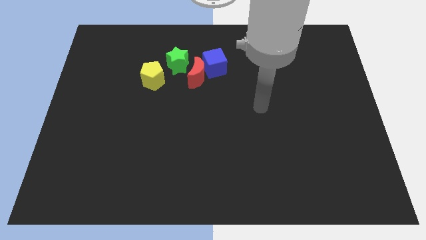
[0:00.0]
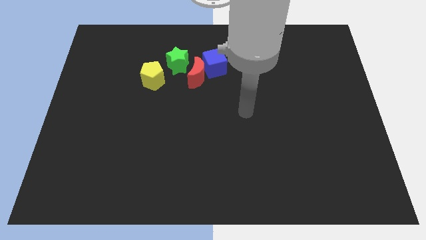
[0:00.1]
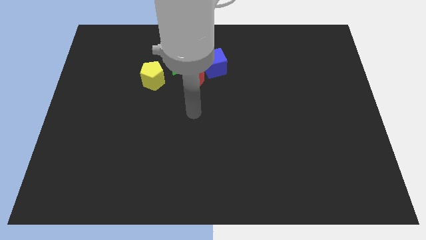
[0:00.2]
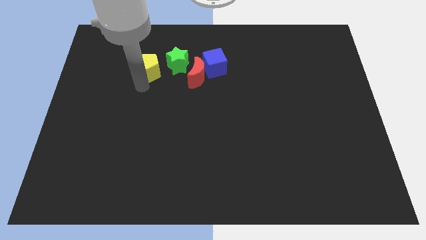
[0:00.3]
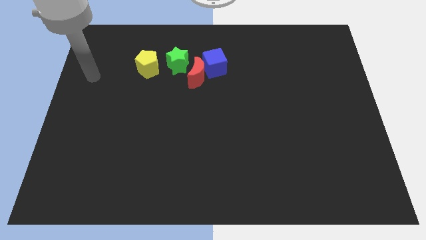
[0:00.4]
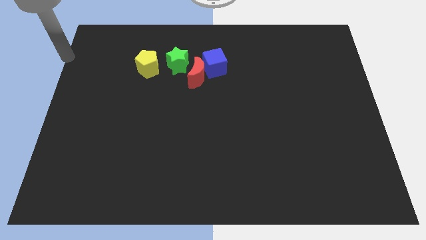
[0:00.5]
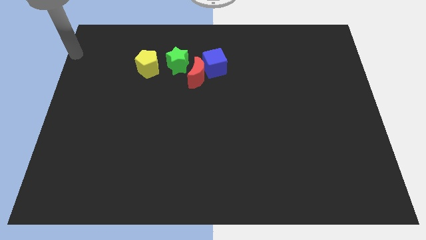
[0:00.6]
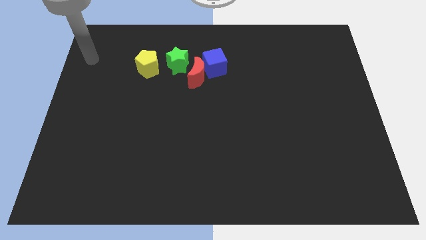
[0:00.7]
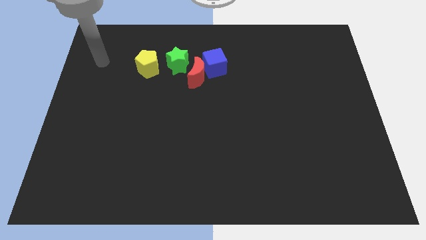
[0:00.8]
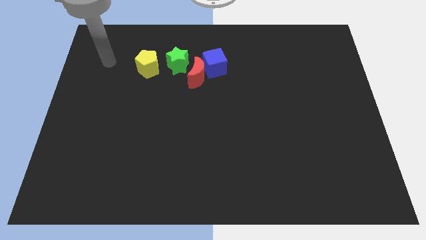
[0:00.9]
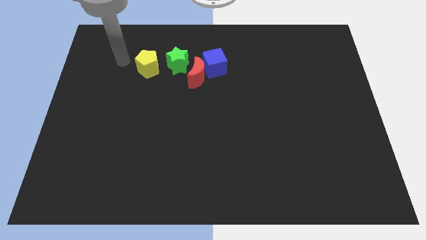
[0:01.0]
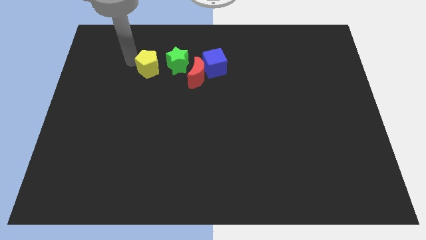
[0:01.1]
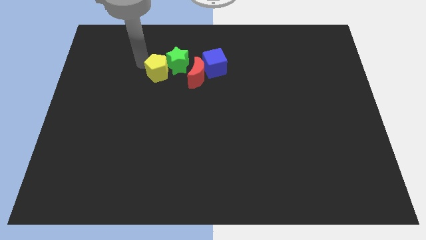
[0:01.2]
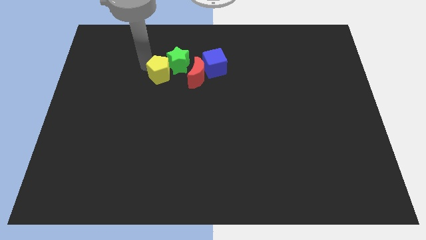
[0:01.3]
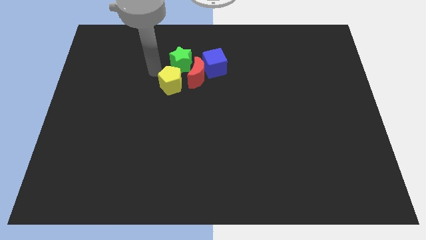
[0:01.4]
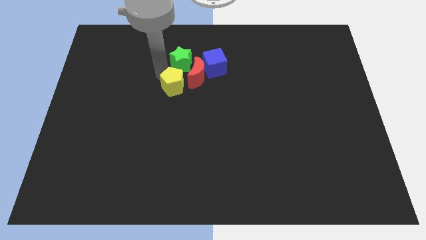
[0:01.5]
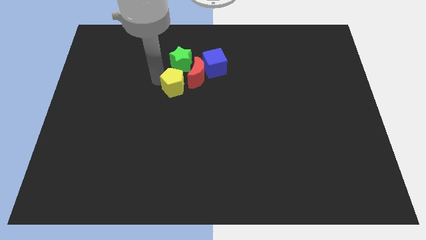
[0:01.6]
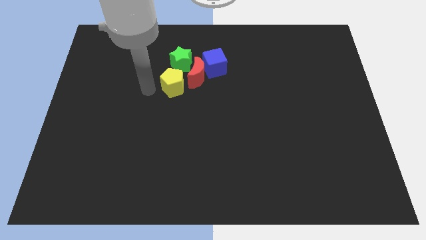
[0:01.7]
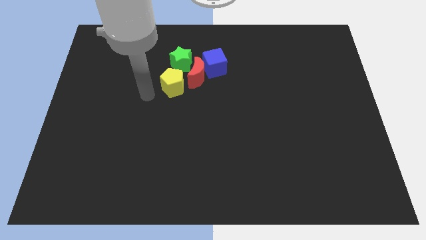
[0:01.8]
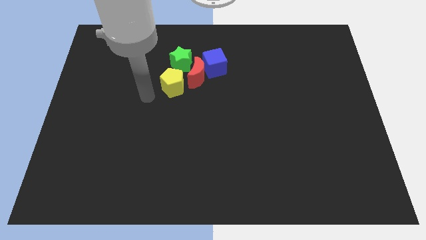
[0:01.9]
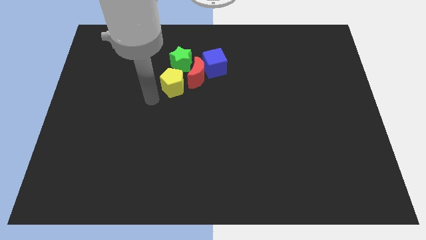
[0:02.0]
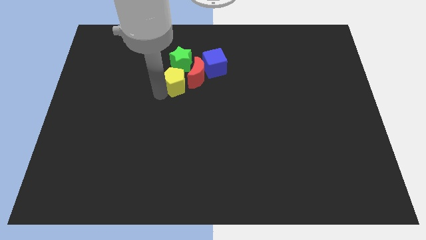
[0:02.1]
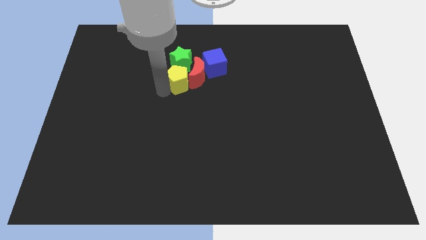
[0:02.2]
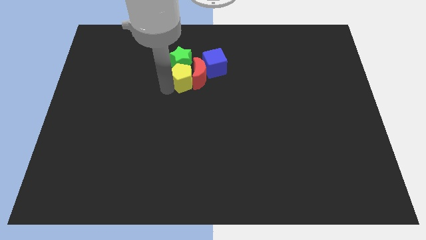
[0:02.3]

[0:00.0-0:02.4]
put the yellow pentagon close to the moon

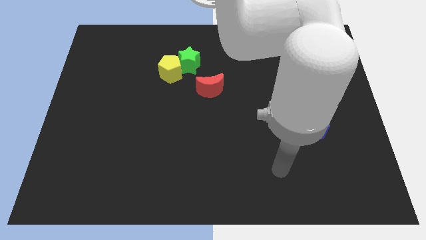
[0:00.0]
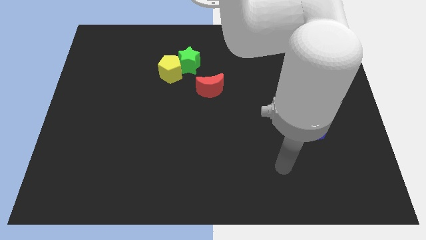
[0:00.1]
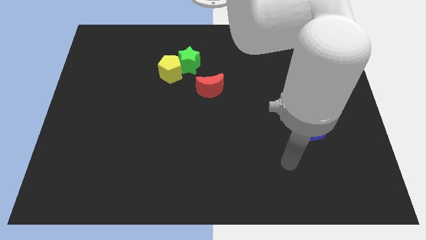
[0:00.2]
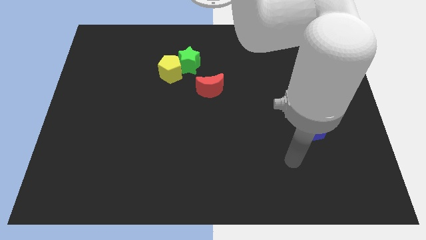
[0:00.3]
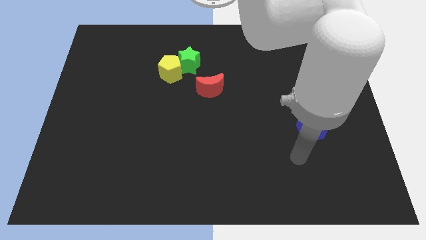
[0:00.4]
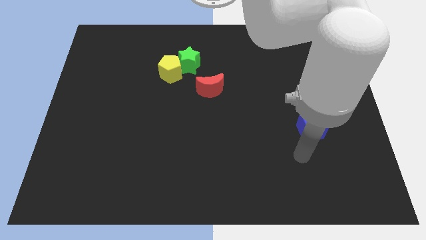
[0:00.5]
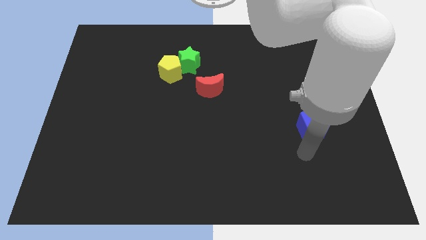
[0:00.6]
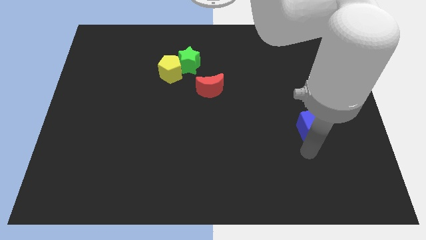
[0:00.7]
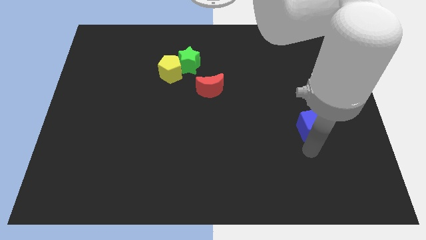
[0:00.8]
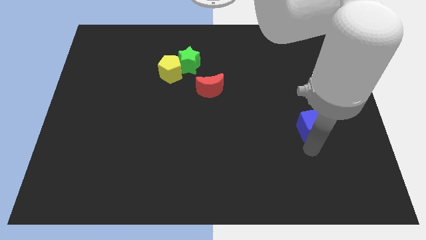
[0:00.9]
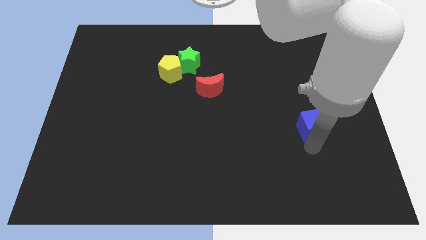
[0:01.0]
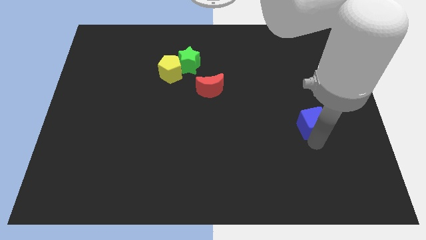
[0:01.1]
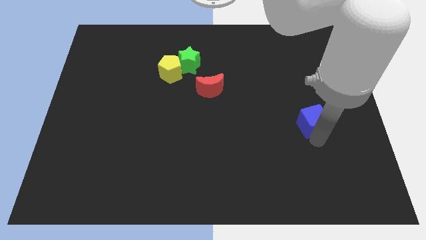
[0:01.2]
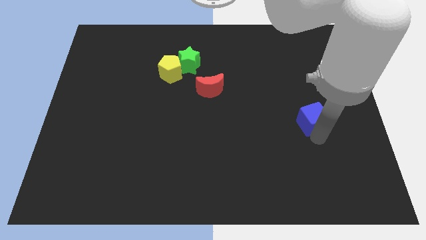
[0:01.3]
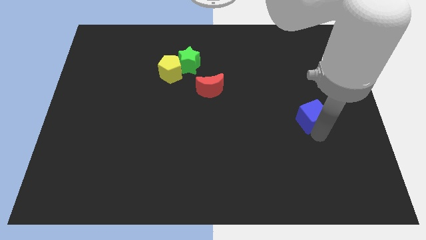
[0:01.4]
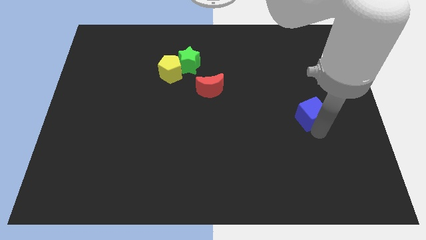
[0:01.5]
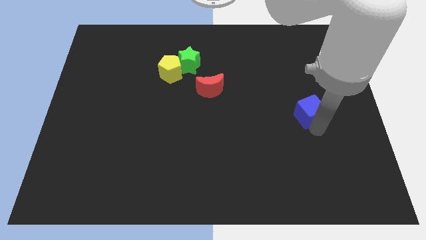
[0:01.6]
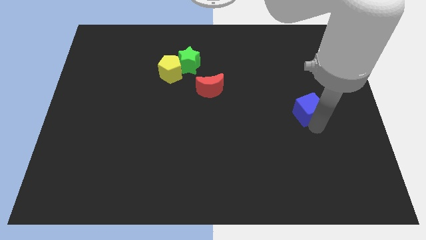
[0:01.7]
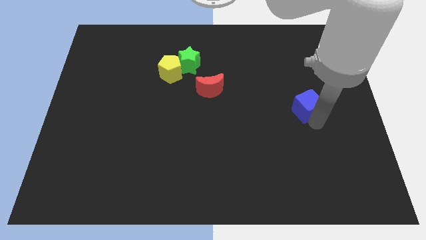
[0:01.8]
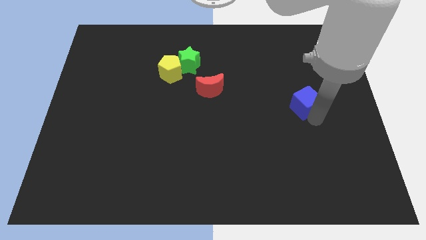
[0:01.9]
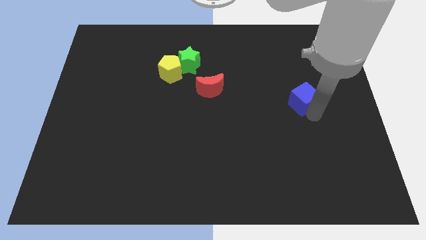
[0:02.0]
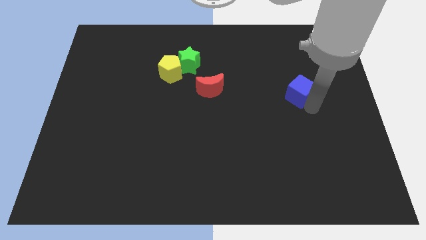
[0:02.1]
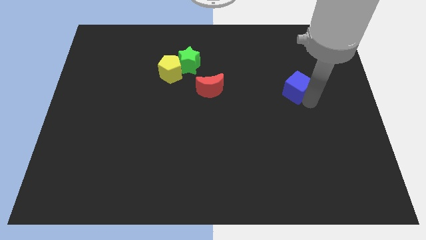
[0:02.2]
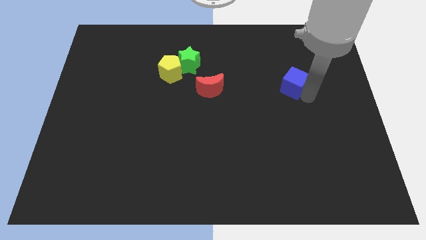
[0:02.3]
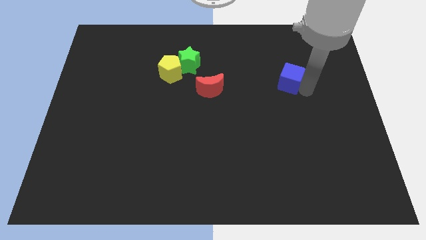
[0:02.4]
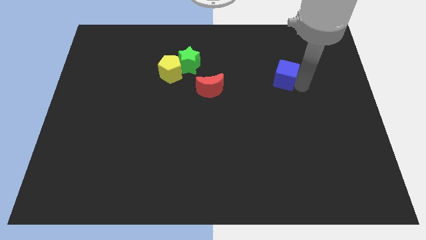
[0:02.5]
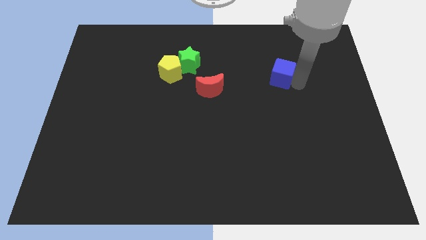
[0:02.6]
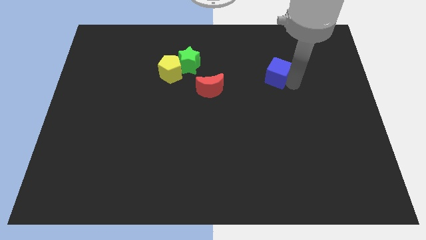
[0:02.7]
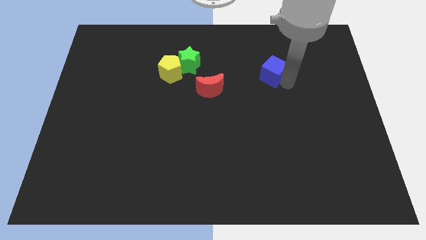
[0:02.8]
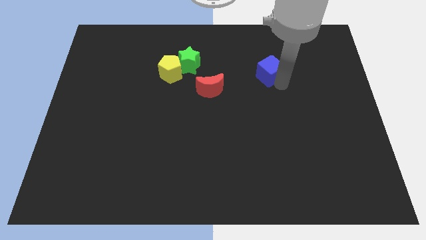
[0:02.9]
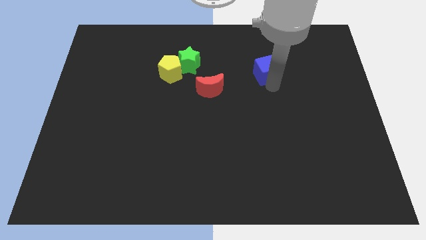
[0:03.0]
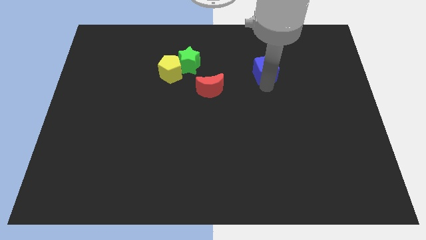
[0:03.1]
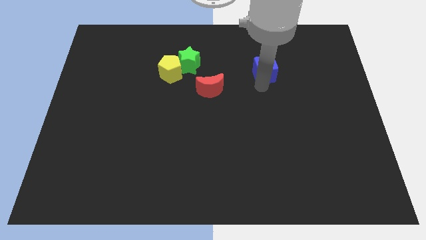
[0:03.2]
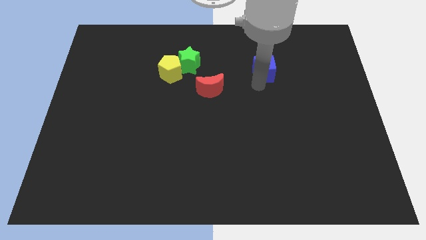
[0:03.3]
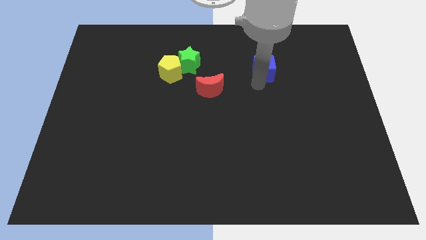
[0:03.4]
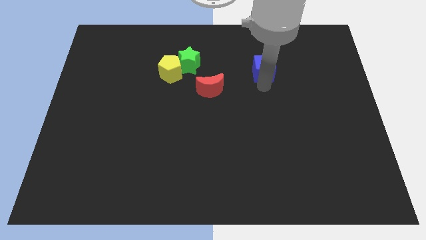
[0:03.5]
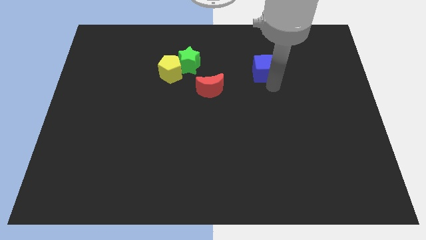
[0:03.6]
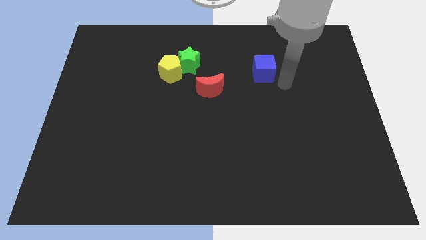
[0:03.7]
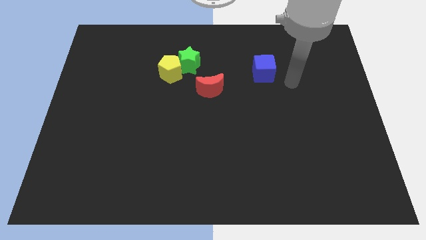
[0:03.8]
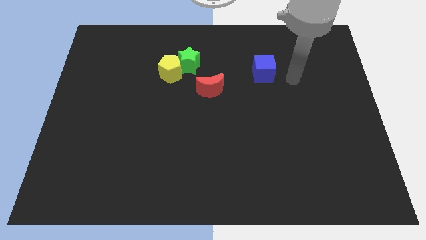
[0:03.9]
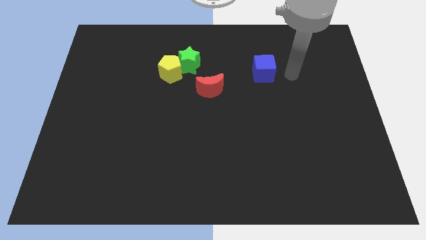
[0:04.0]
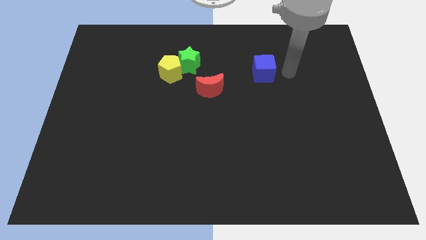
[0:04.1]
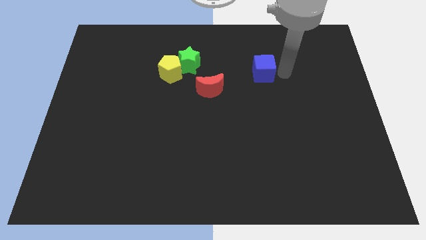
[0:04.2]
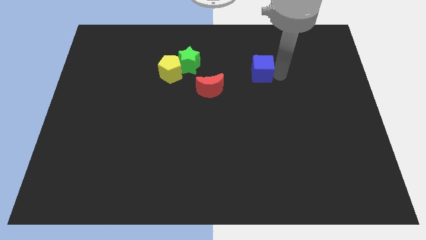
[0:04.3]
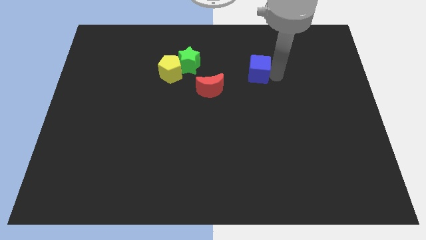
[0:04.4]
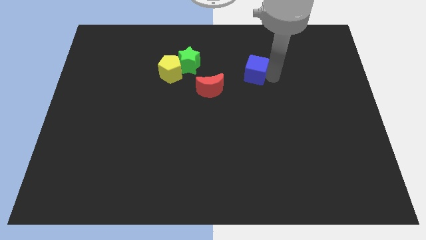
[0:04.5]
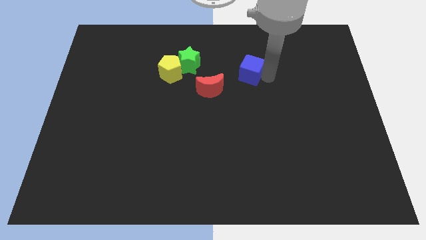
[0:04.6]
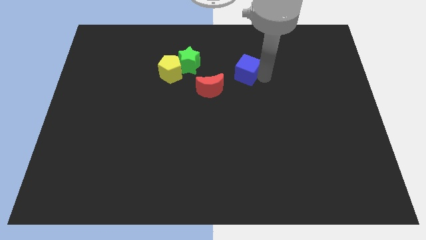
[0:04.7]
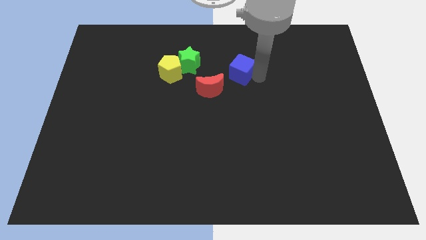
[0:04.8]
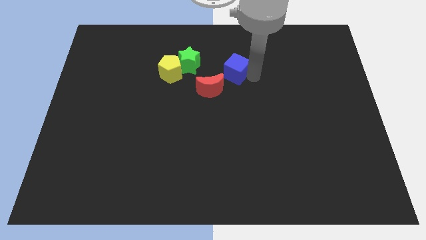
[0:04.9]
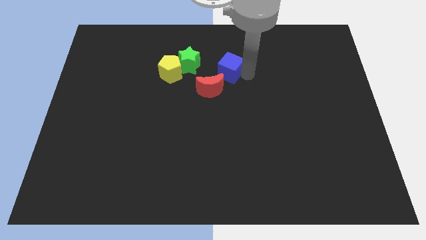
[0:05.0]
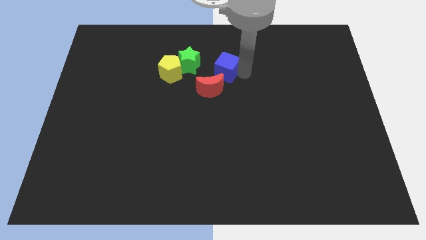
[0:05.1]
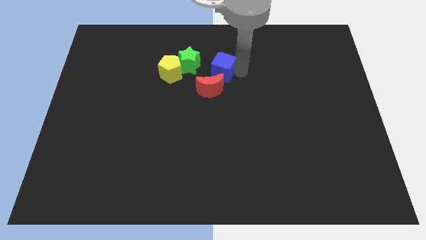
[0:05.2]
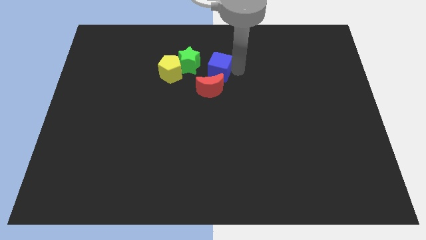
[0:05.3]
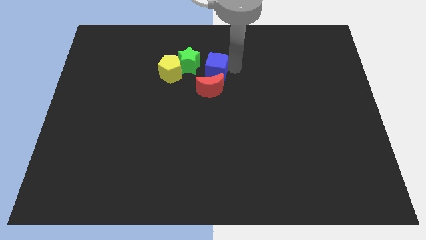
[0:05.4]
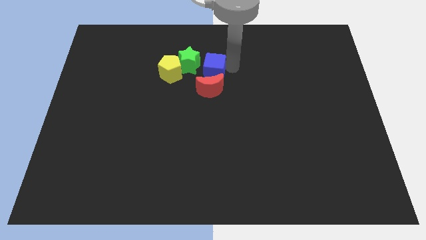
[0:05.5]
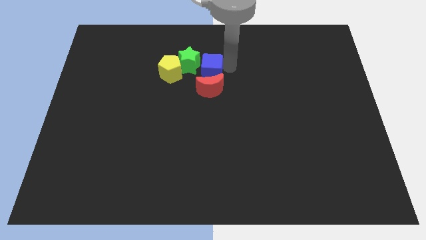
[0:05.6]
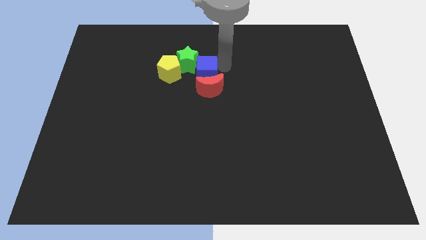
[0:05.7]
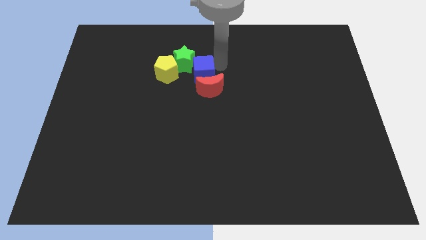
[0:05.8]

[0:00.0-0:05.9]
push the blue block to the green star
